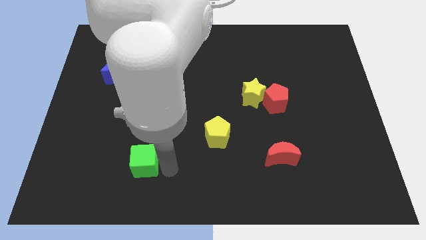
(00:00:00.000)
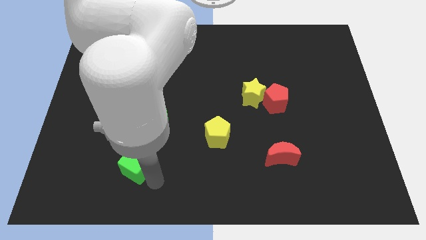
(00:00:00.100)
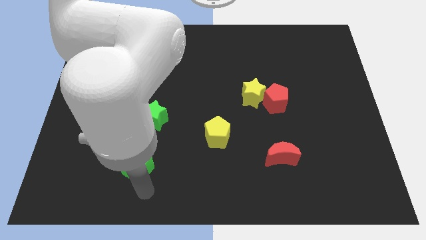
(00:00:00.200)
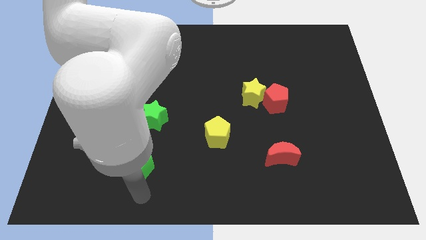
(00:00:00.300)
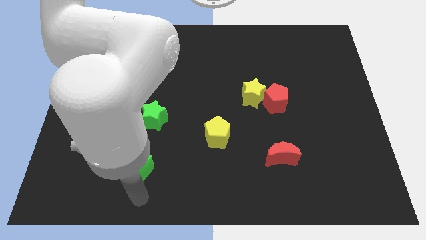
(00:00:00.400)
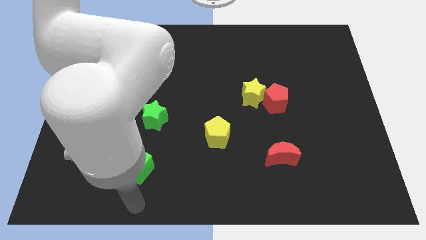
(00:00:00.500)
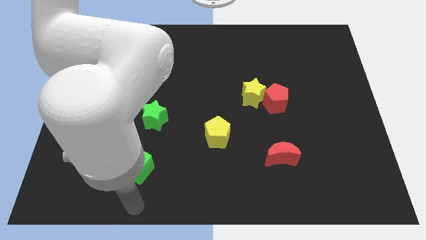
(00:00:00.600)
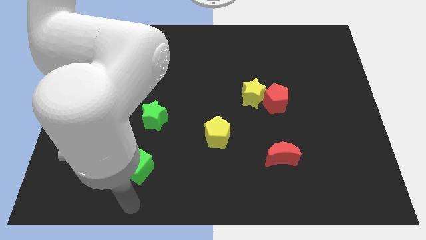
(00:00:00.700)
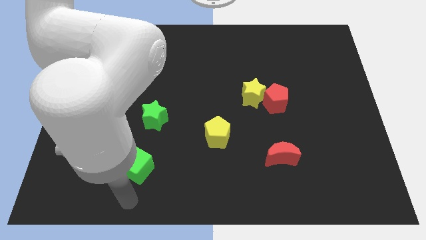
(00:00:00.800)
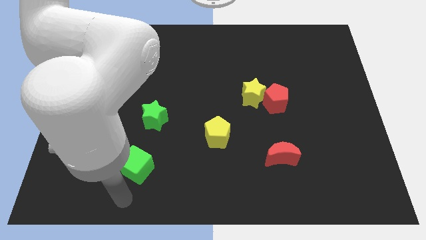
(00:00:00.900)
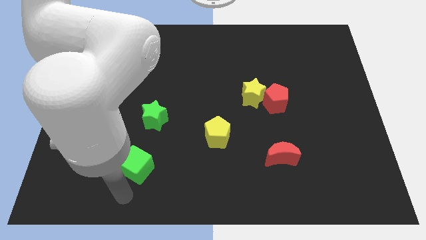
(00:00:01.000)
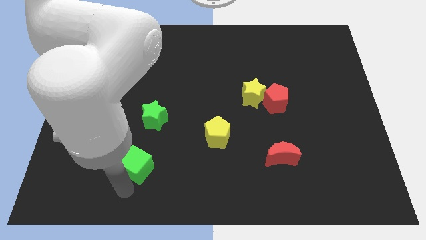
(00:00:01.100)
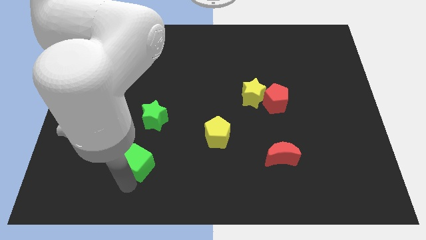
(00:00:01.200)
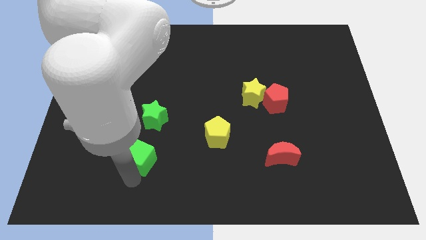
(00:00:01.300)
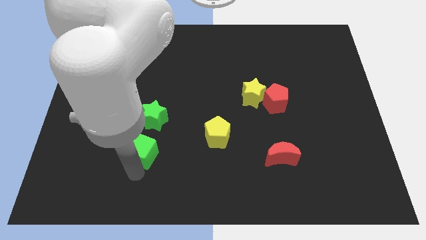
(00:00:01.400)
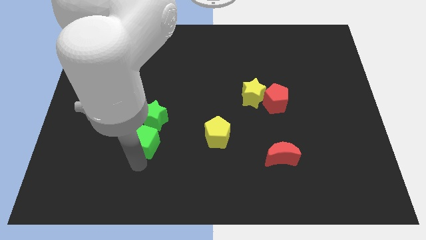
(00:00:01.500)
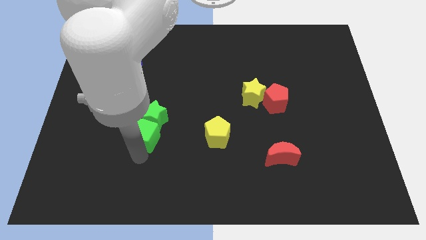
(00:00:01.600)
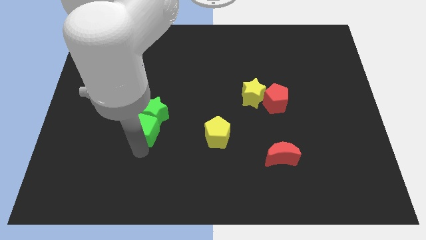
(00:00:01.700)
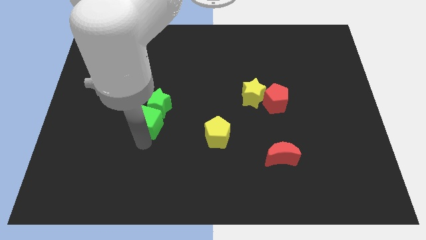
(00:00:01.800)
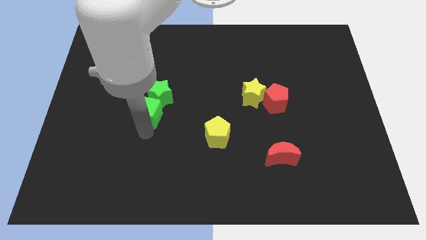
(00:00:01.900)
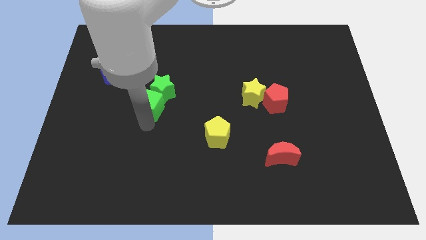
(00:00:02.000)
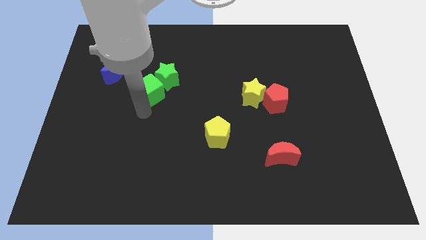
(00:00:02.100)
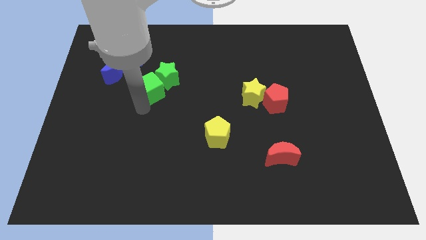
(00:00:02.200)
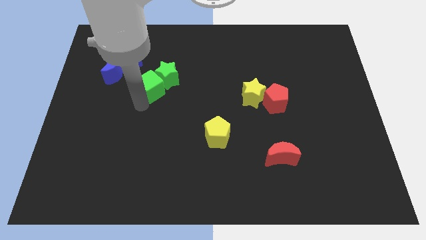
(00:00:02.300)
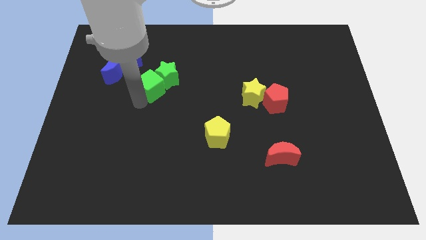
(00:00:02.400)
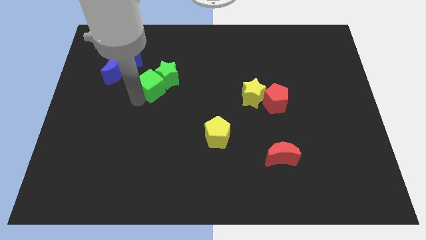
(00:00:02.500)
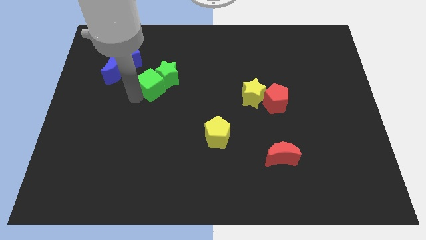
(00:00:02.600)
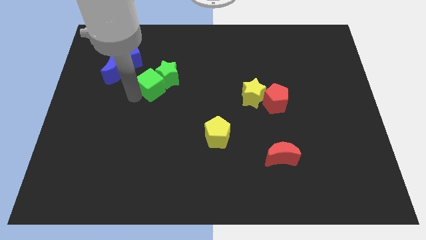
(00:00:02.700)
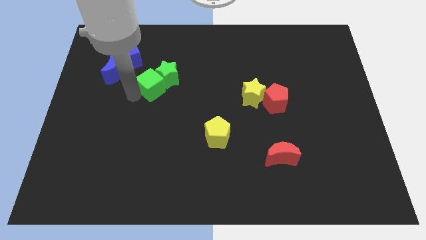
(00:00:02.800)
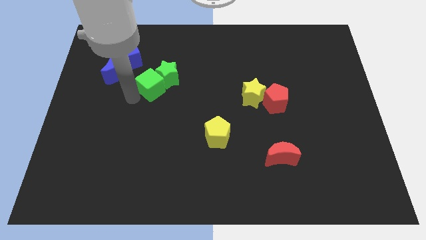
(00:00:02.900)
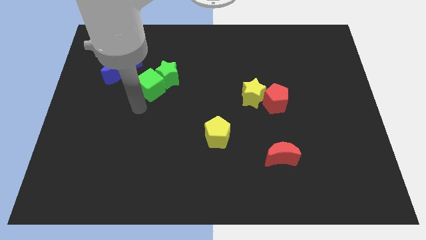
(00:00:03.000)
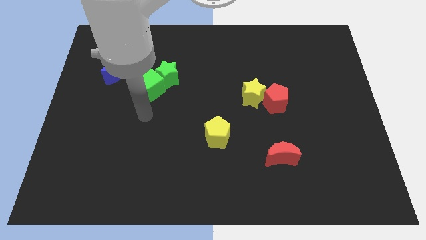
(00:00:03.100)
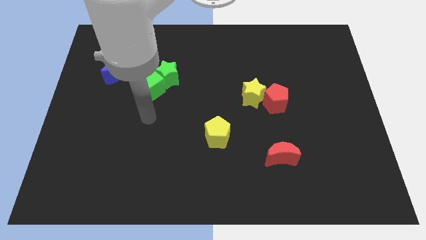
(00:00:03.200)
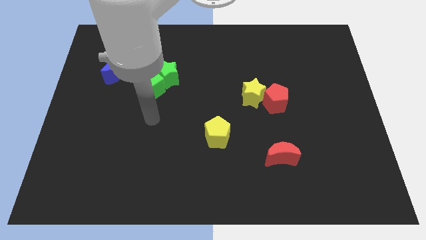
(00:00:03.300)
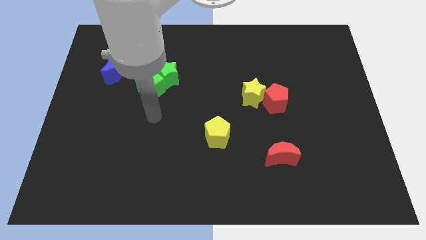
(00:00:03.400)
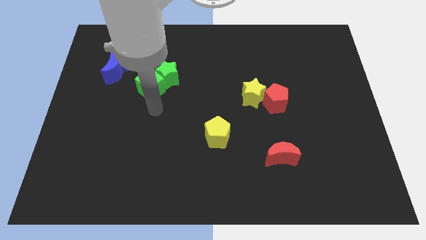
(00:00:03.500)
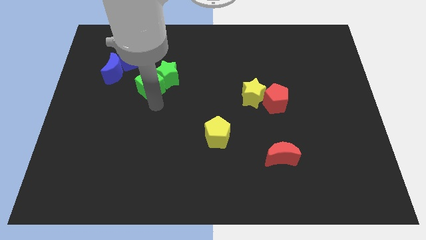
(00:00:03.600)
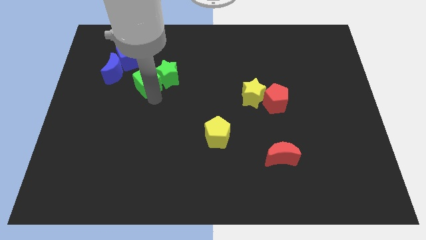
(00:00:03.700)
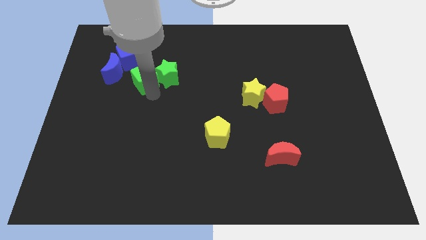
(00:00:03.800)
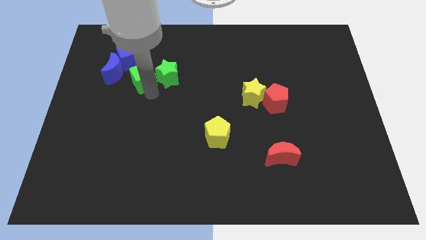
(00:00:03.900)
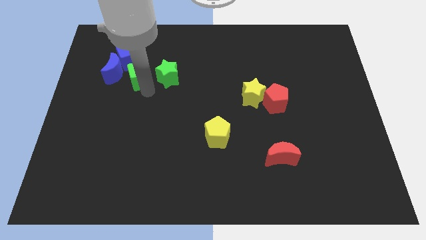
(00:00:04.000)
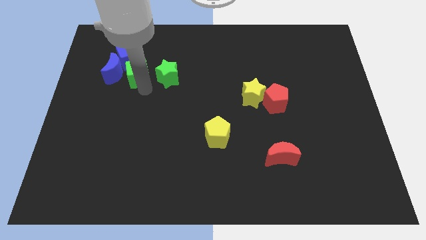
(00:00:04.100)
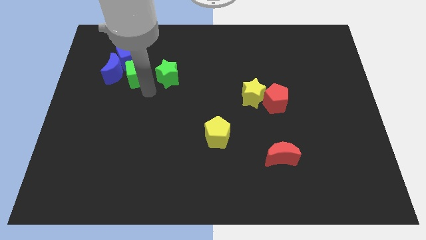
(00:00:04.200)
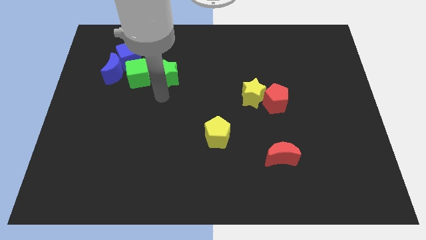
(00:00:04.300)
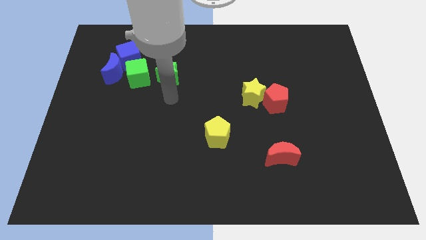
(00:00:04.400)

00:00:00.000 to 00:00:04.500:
place green cube to the left of green star

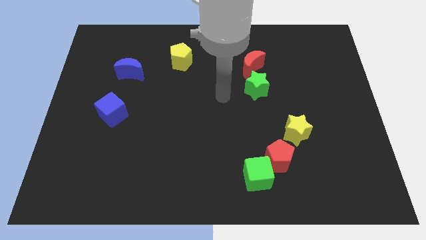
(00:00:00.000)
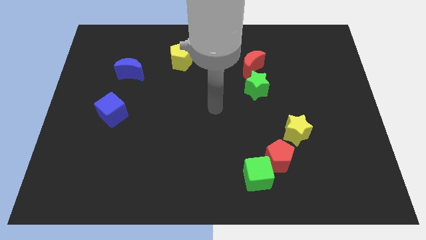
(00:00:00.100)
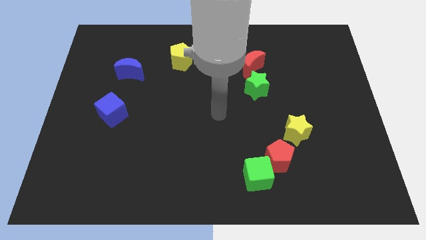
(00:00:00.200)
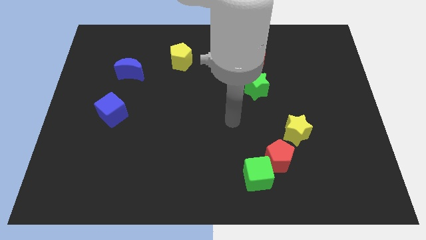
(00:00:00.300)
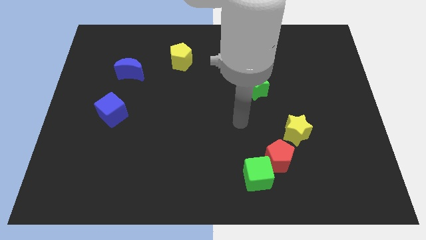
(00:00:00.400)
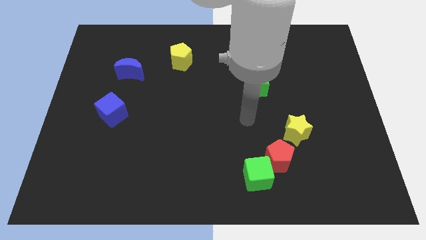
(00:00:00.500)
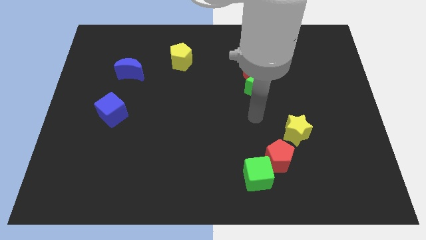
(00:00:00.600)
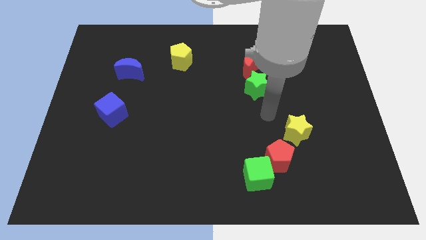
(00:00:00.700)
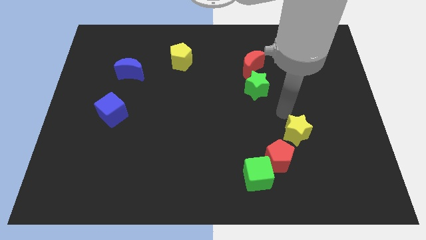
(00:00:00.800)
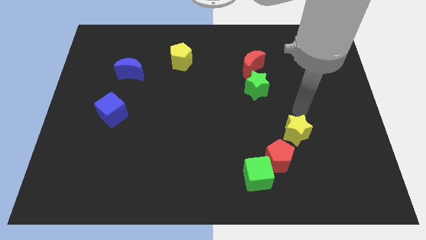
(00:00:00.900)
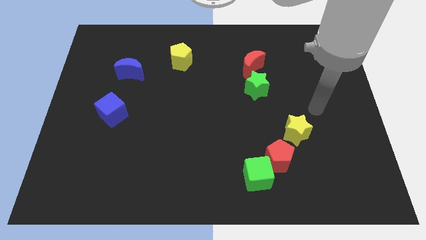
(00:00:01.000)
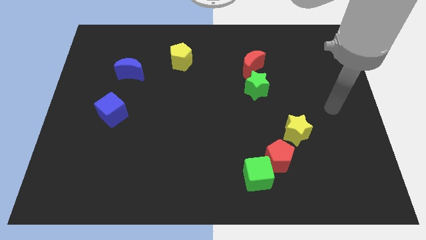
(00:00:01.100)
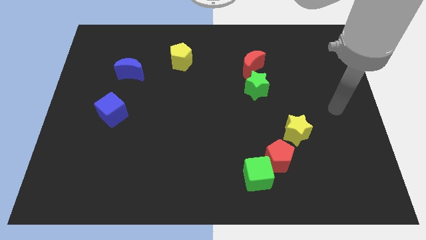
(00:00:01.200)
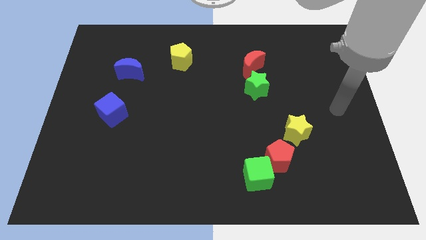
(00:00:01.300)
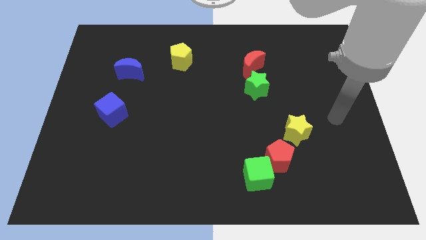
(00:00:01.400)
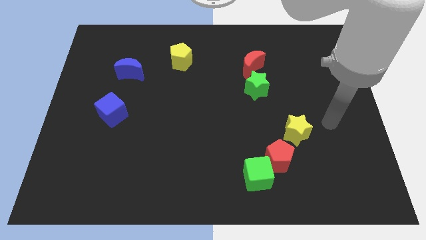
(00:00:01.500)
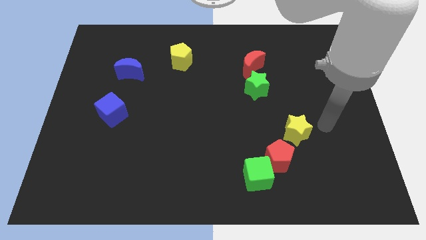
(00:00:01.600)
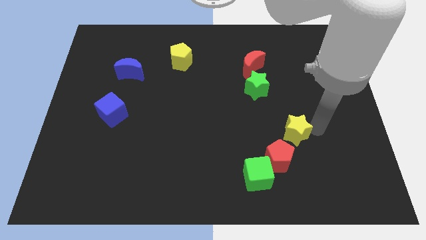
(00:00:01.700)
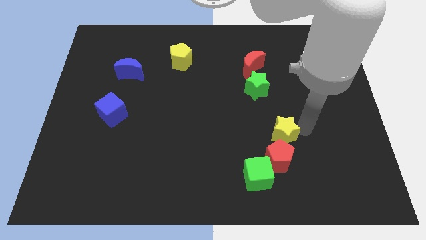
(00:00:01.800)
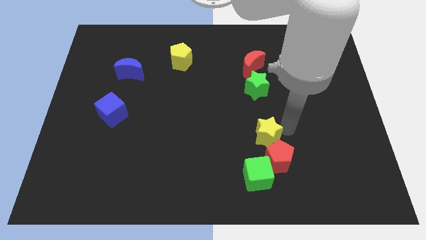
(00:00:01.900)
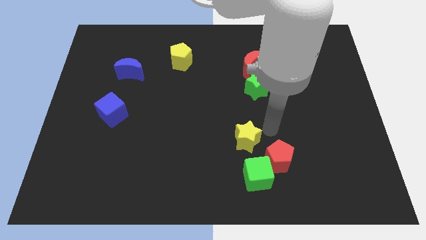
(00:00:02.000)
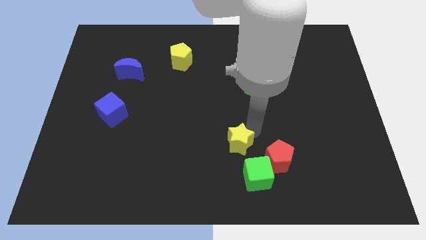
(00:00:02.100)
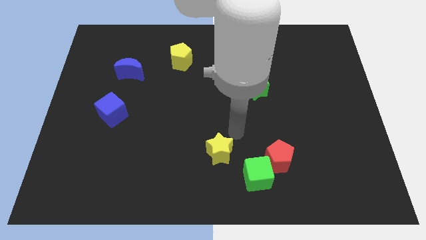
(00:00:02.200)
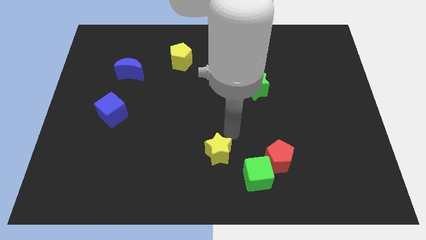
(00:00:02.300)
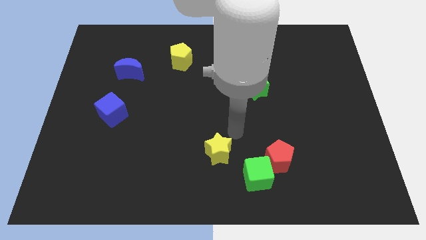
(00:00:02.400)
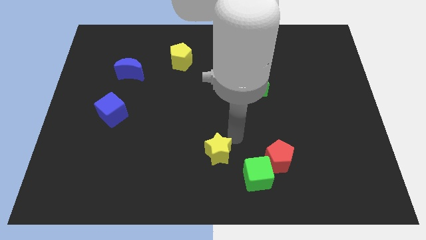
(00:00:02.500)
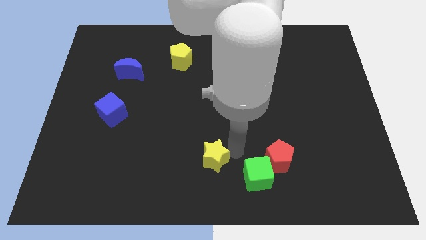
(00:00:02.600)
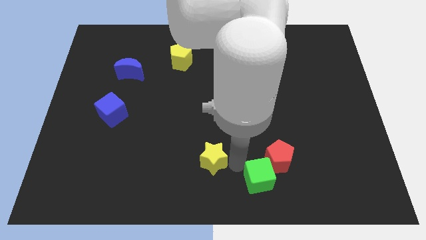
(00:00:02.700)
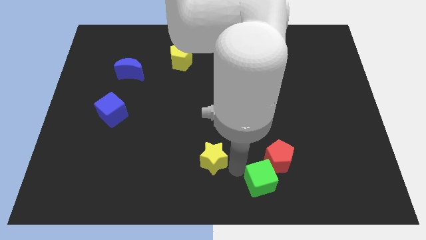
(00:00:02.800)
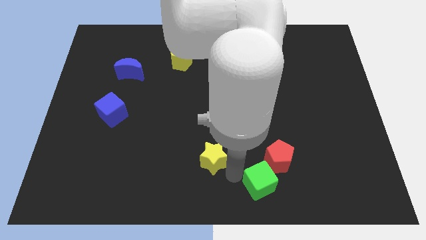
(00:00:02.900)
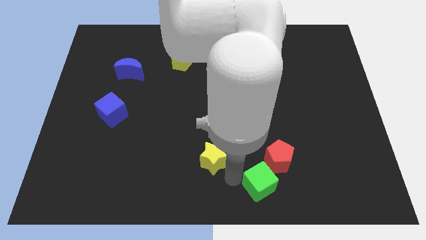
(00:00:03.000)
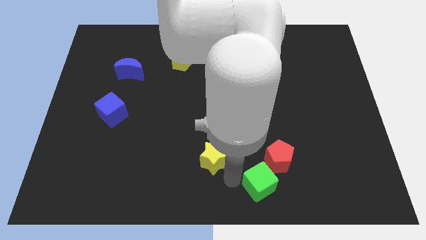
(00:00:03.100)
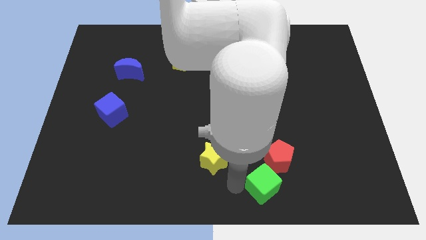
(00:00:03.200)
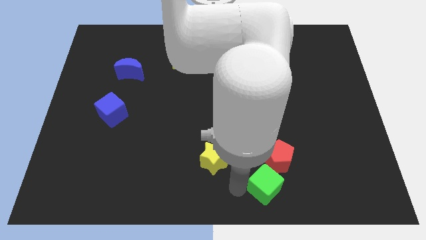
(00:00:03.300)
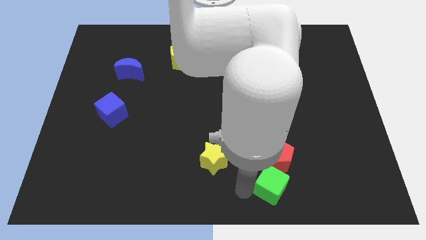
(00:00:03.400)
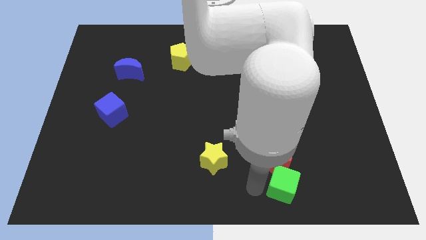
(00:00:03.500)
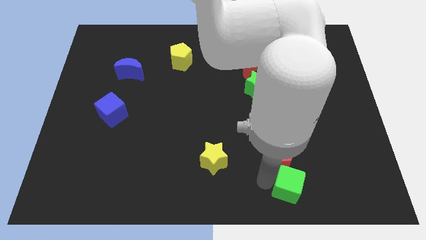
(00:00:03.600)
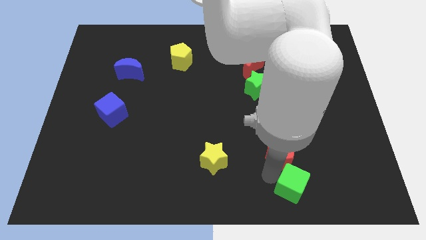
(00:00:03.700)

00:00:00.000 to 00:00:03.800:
place the yellow star in between the green cube and blue cube

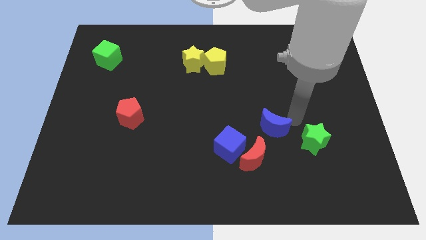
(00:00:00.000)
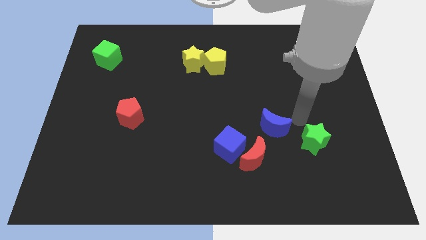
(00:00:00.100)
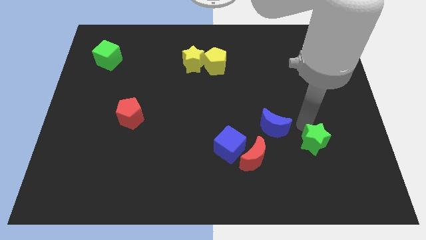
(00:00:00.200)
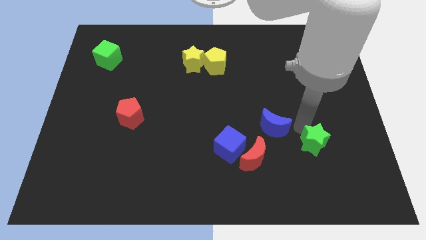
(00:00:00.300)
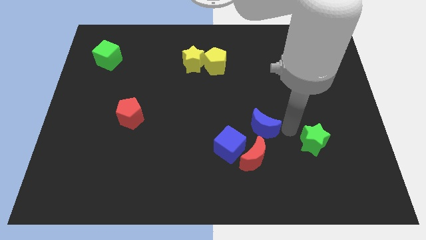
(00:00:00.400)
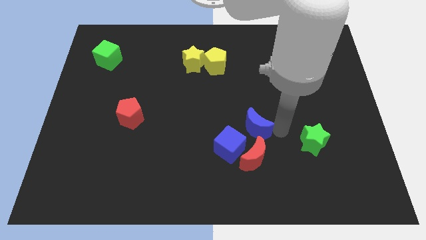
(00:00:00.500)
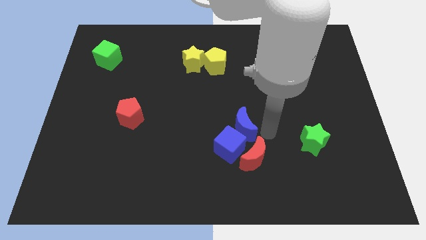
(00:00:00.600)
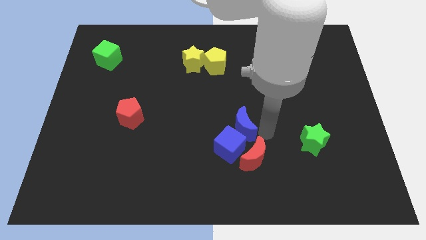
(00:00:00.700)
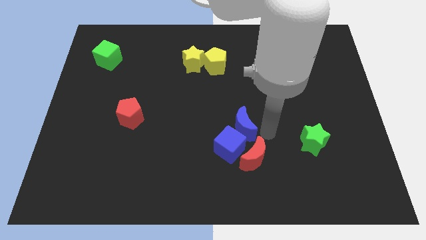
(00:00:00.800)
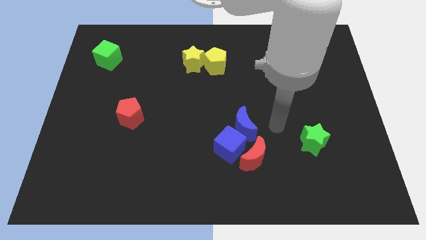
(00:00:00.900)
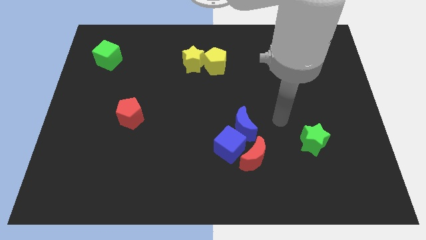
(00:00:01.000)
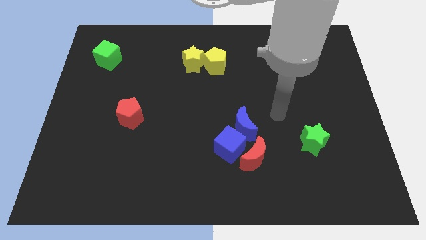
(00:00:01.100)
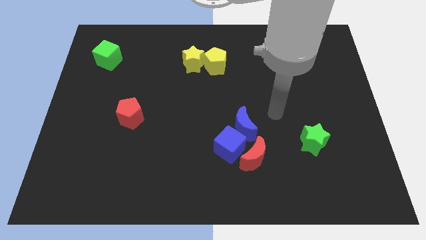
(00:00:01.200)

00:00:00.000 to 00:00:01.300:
move blue crescent close to blue cube
